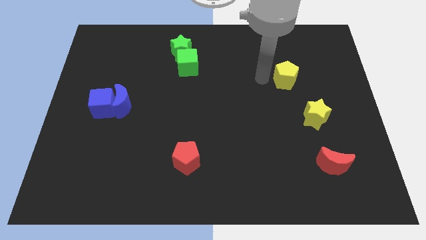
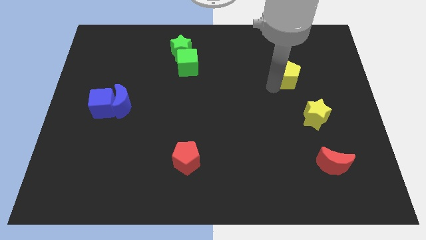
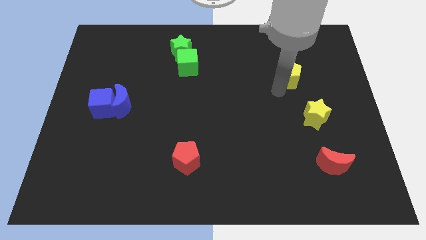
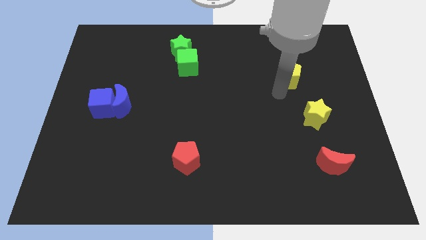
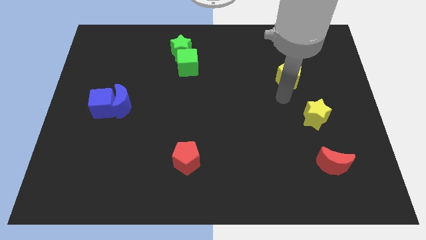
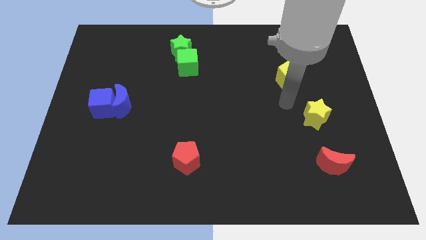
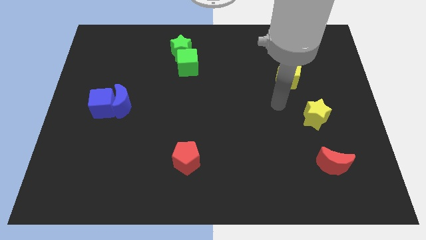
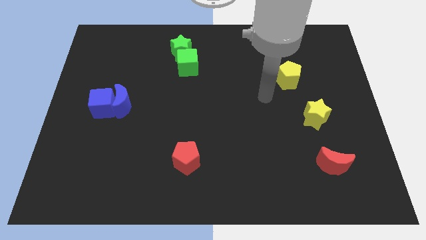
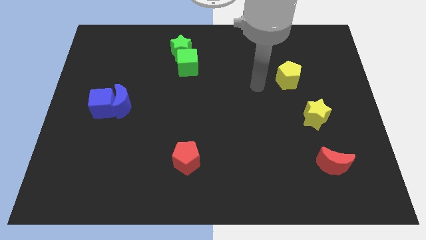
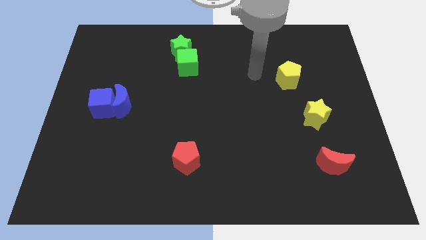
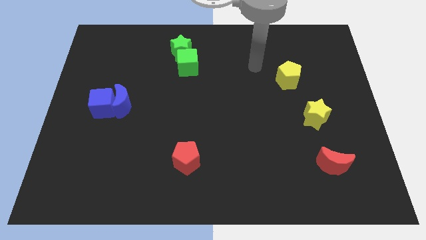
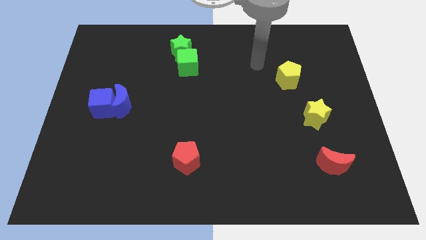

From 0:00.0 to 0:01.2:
move your hand away from yellow pentagon

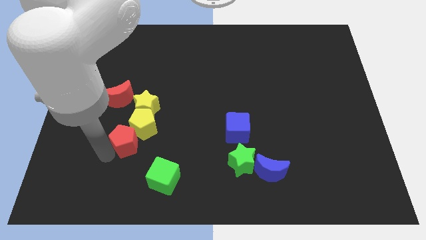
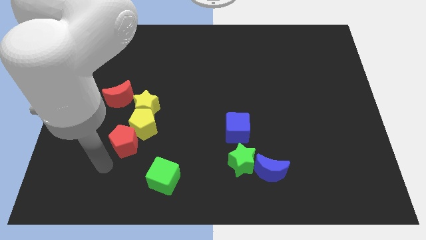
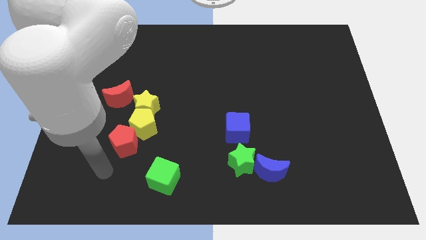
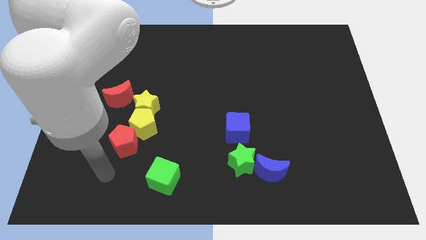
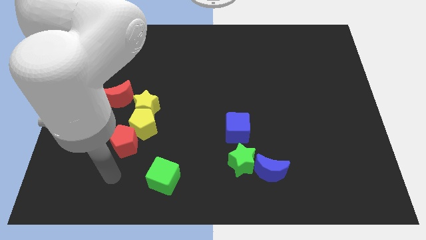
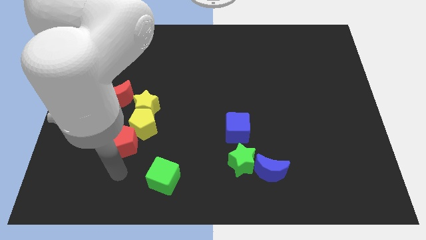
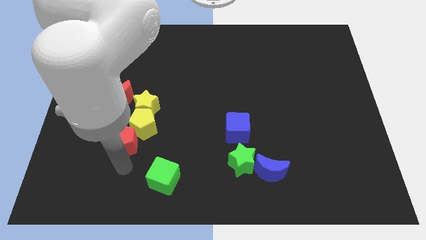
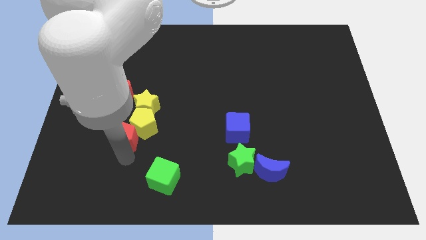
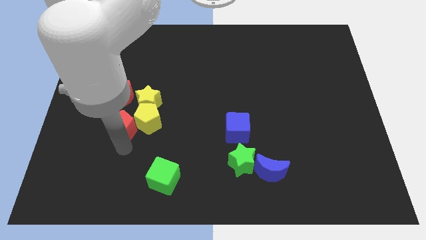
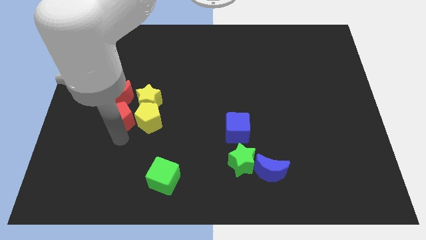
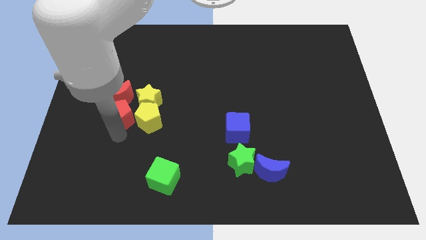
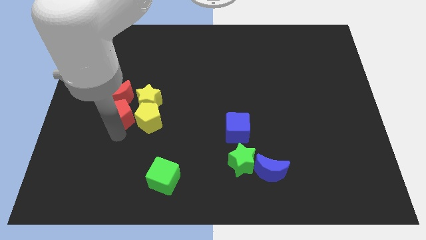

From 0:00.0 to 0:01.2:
push red pentagon below the red moon

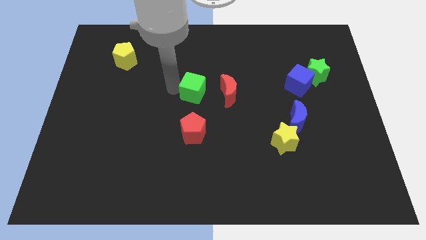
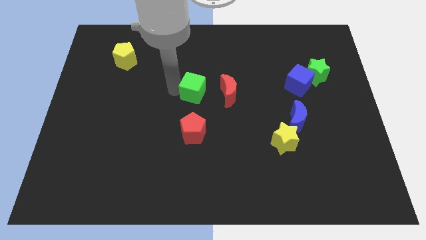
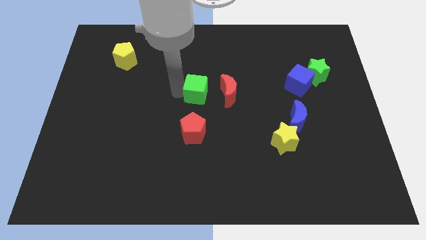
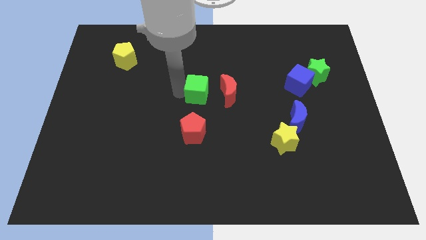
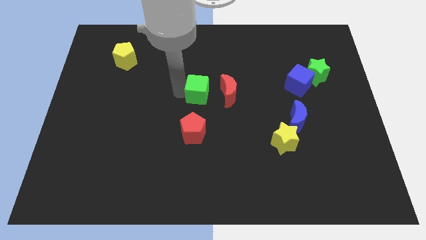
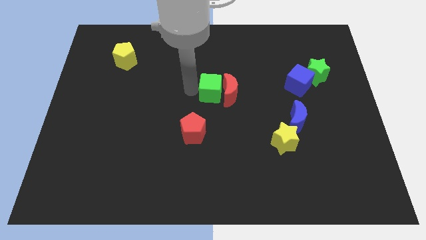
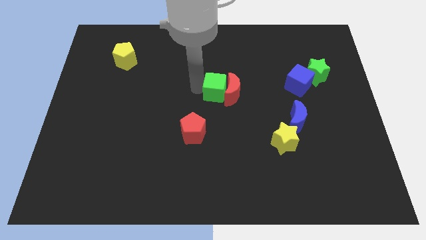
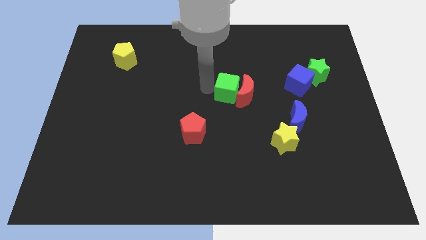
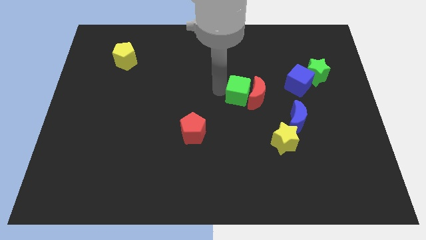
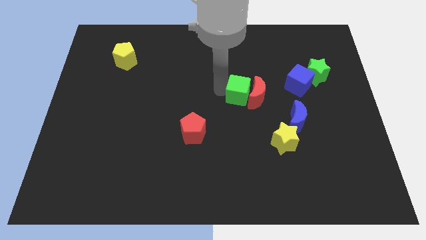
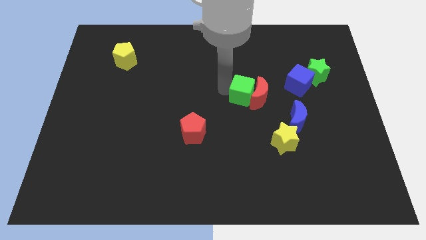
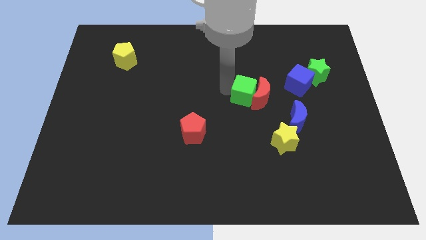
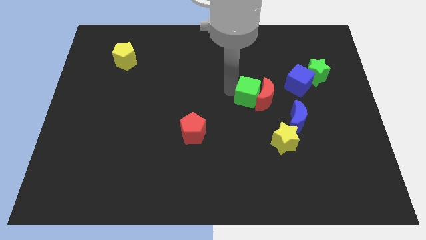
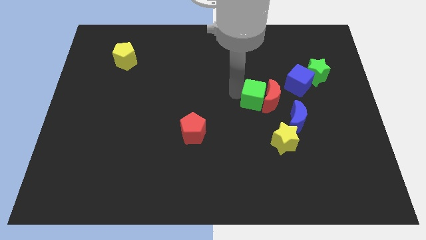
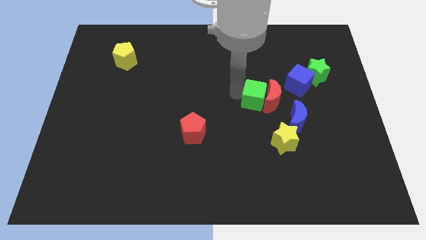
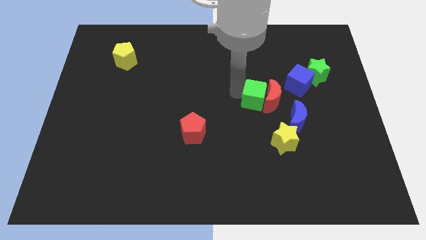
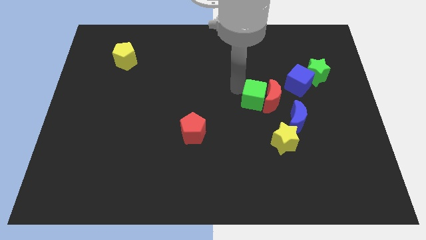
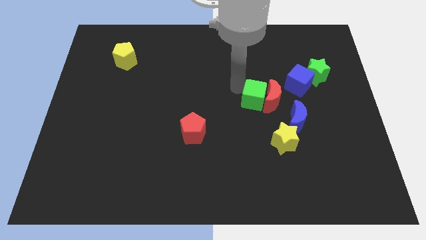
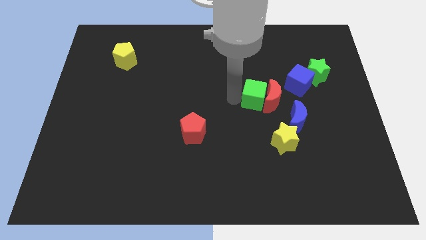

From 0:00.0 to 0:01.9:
push the red crescent with the green cube towards the blue crescent

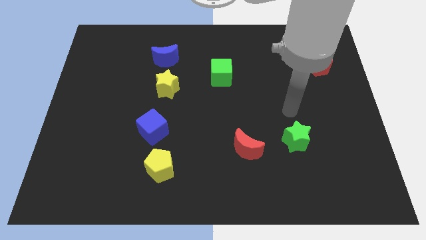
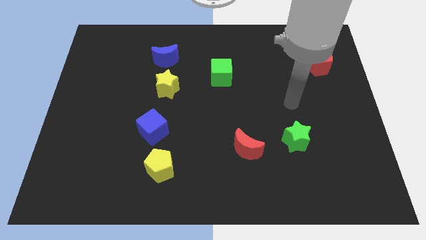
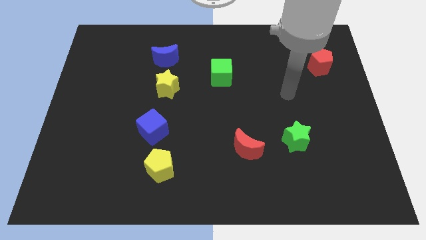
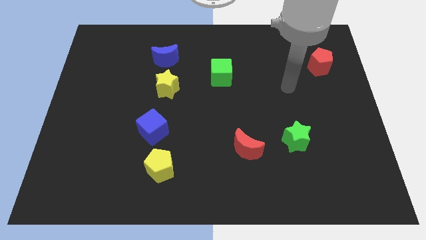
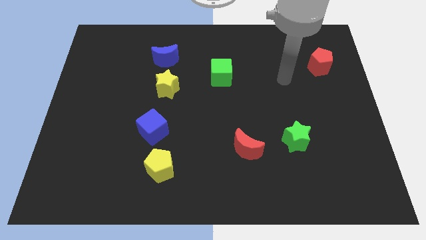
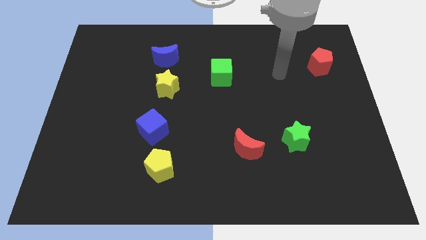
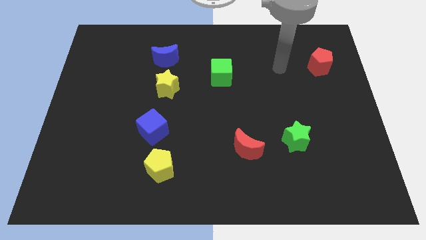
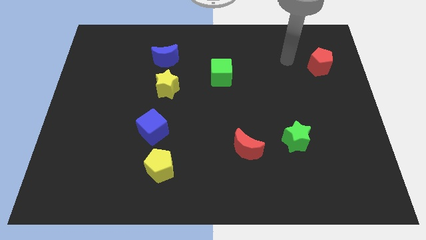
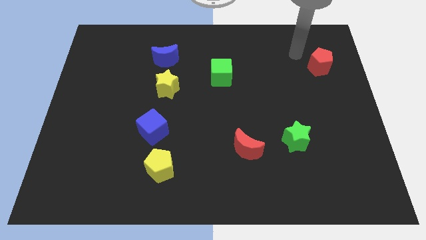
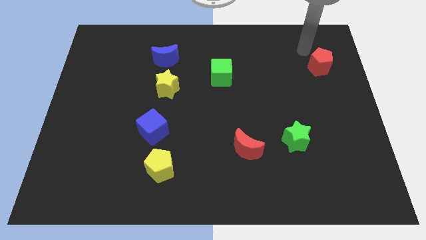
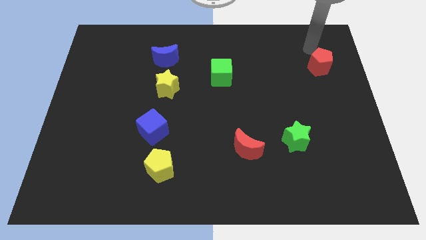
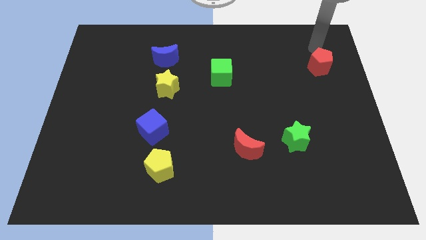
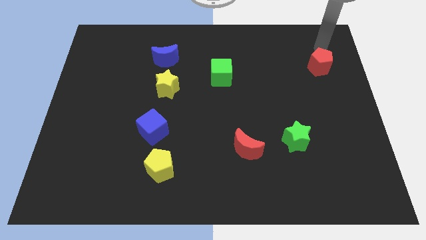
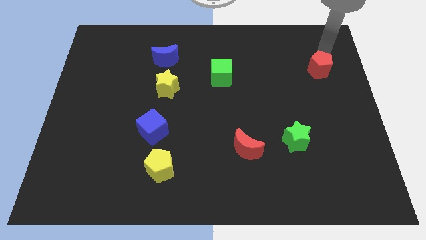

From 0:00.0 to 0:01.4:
point the arm above the red pentagon

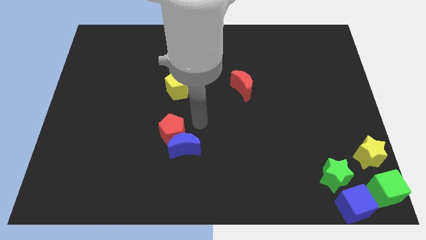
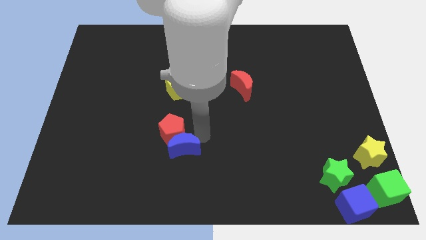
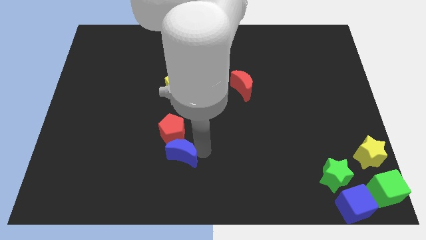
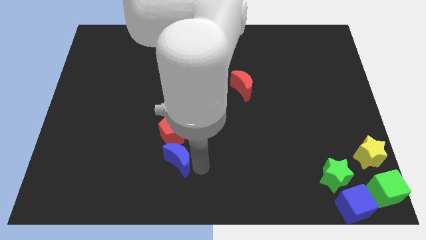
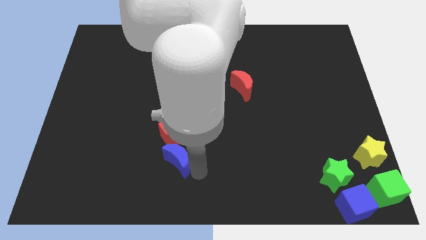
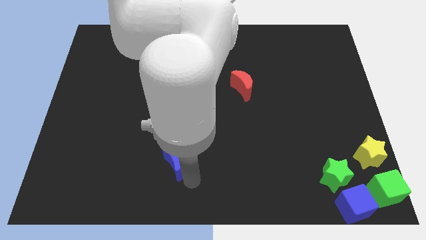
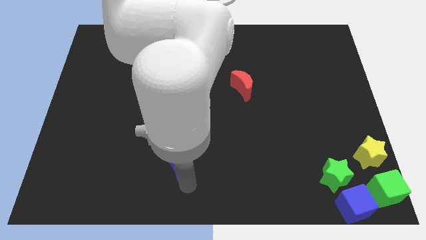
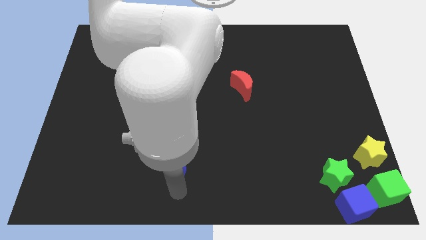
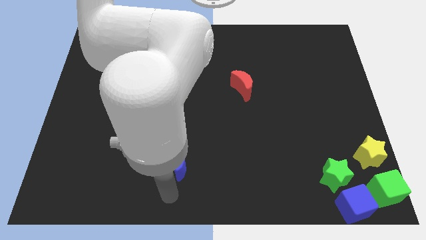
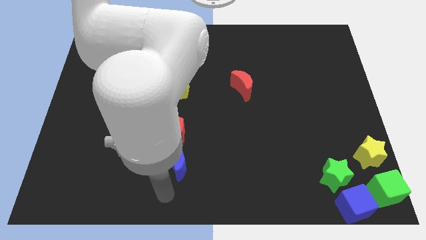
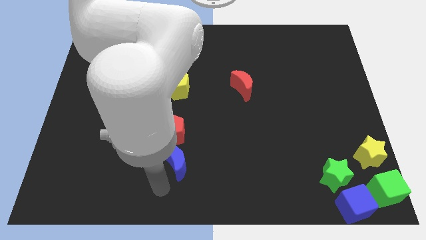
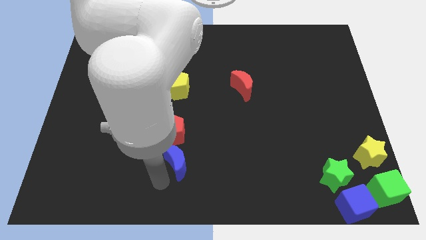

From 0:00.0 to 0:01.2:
move the blue crescent towards the bottom of the red pentagon

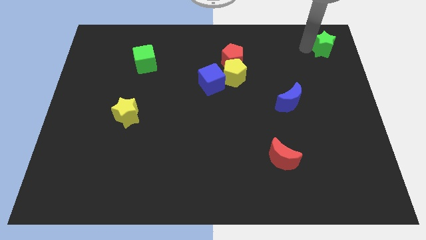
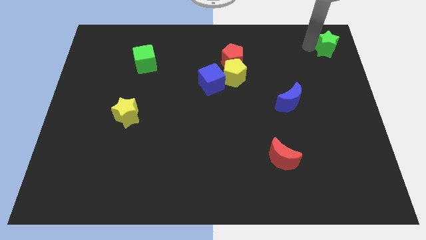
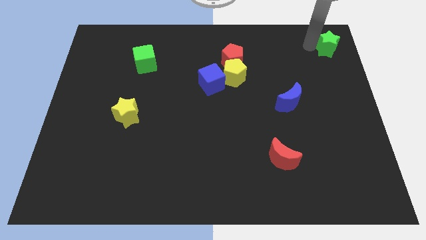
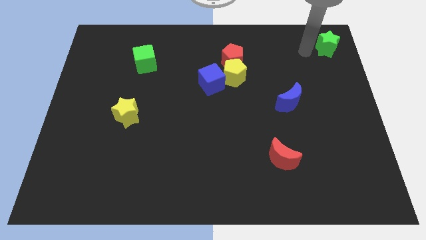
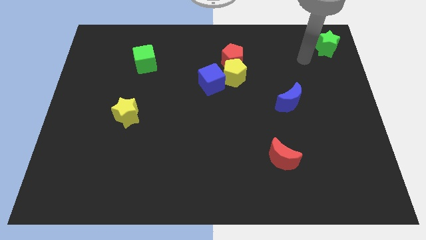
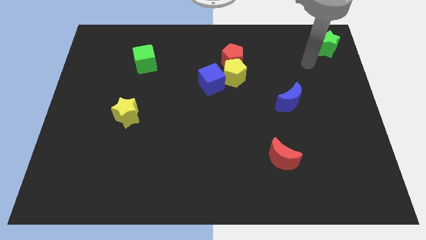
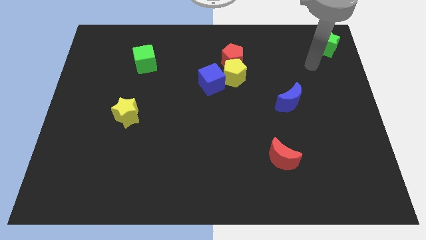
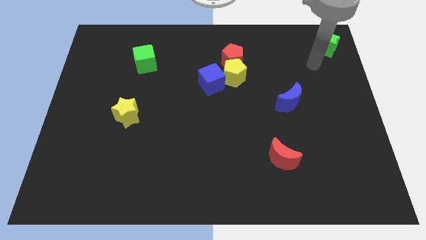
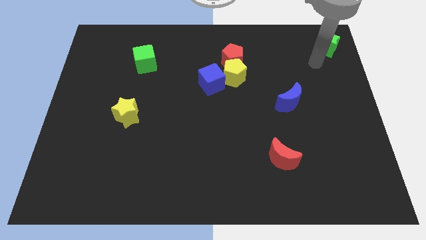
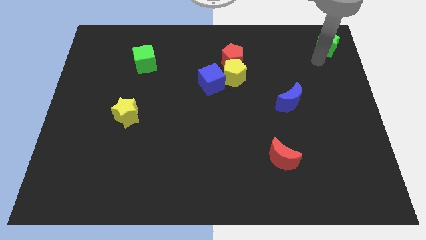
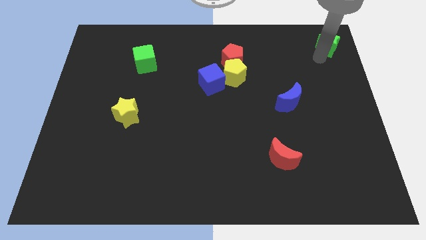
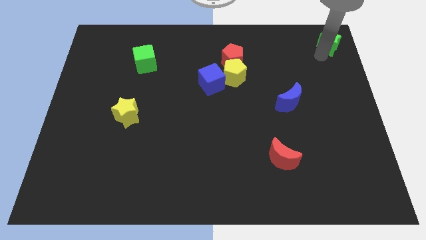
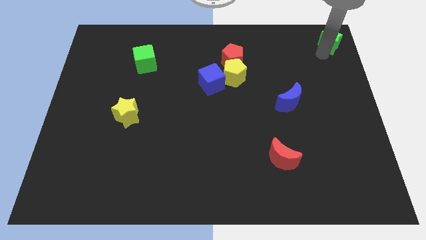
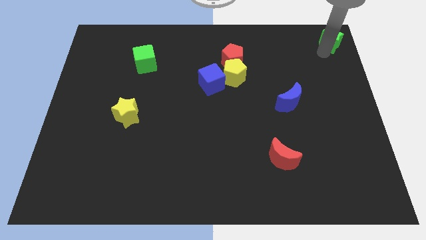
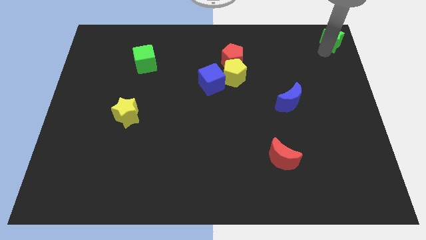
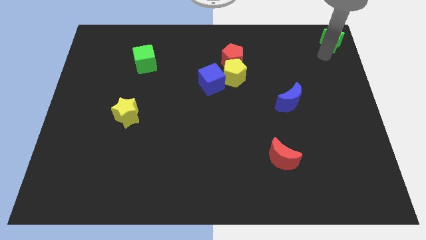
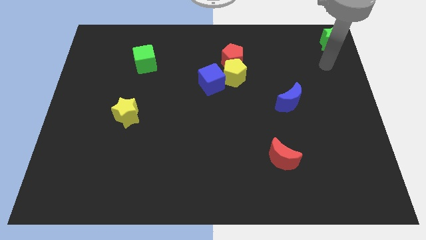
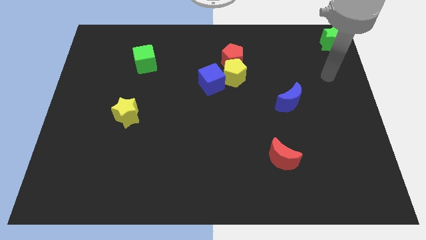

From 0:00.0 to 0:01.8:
move the green star to the top right corner of the board
